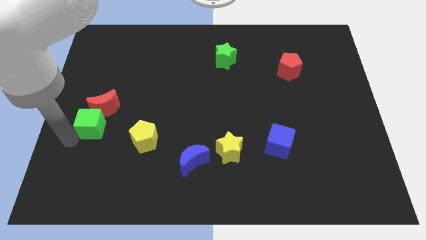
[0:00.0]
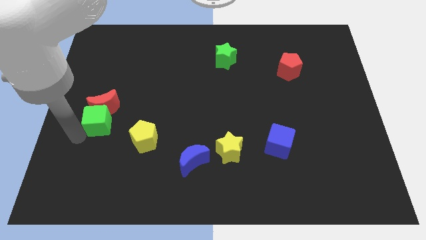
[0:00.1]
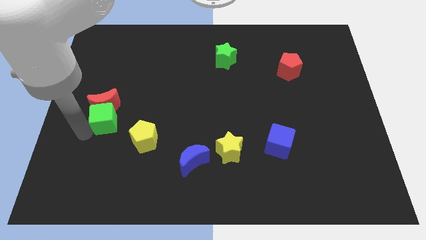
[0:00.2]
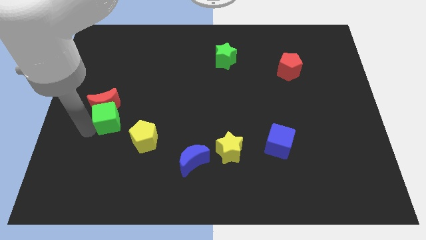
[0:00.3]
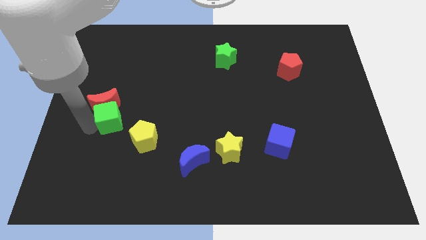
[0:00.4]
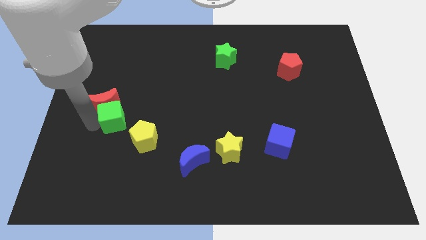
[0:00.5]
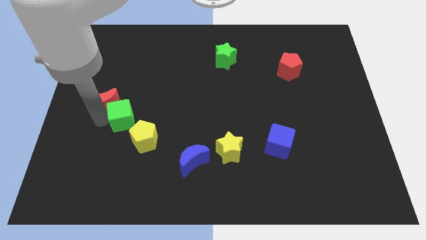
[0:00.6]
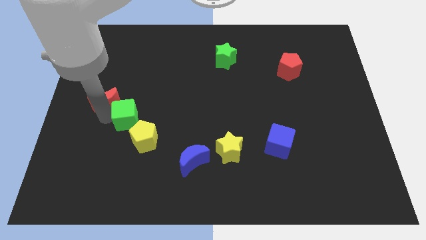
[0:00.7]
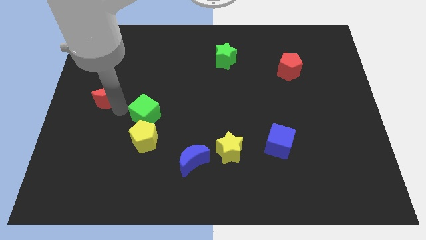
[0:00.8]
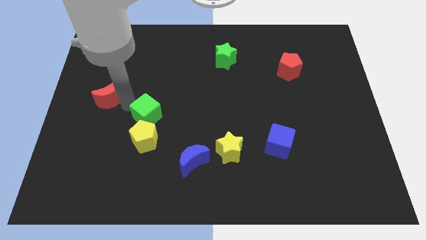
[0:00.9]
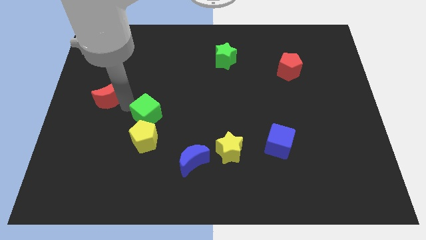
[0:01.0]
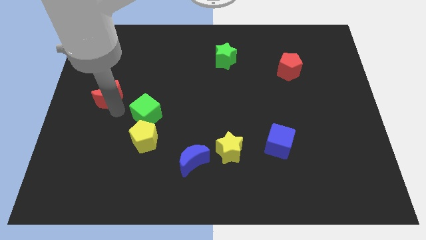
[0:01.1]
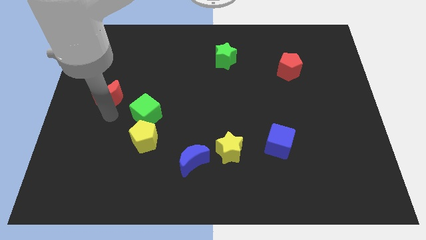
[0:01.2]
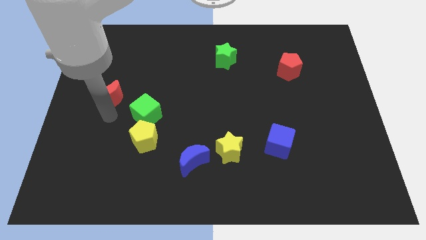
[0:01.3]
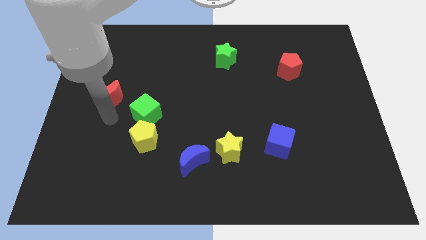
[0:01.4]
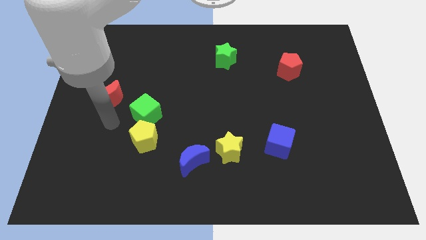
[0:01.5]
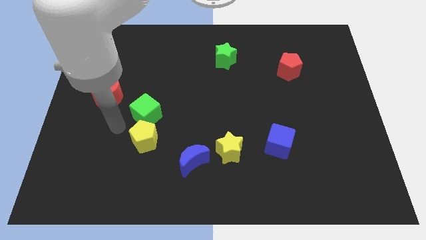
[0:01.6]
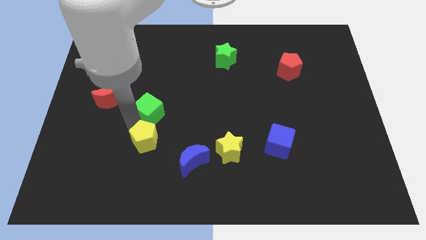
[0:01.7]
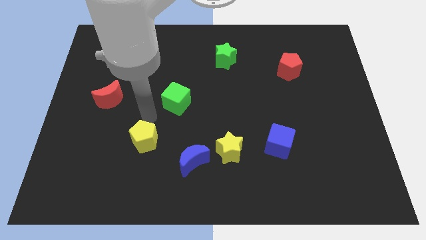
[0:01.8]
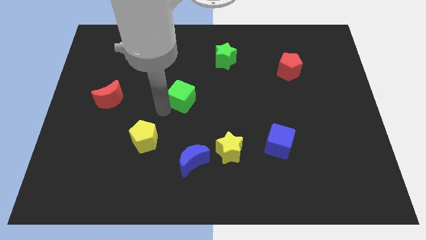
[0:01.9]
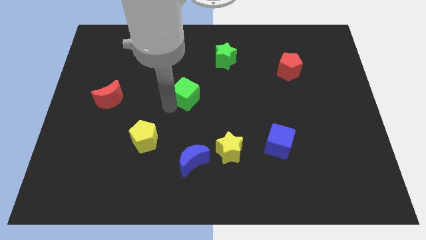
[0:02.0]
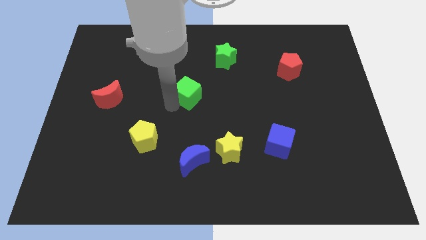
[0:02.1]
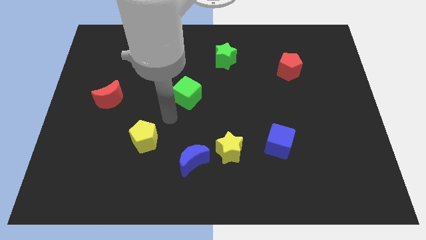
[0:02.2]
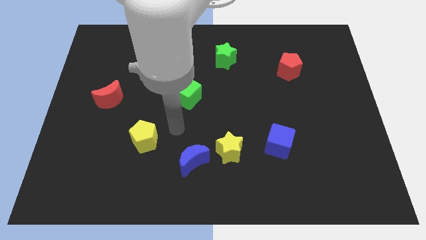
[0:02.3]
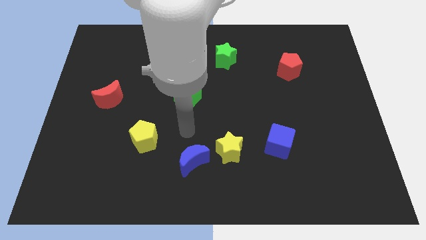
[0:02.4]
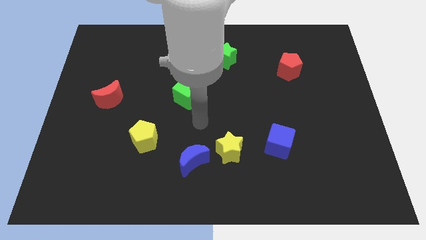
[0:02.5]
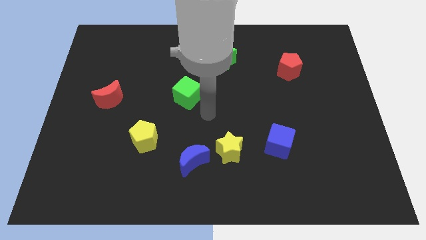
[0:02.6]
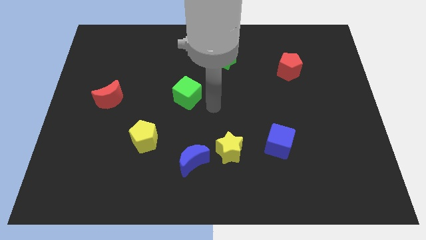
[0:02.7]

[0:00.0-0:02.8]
separate the green cube from the red moon

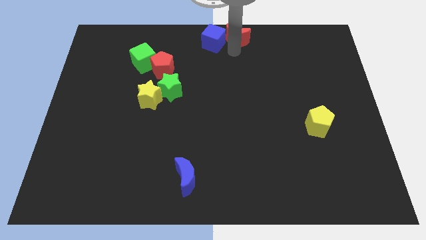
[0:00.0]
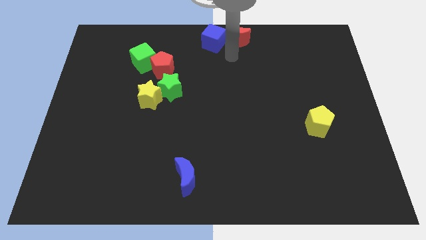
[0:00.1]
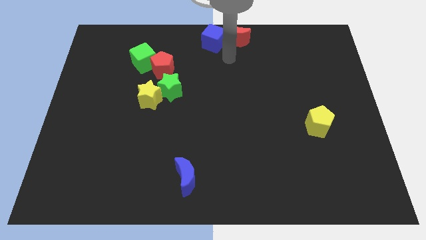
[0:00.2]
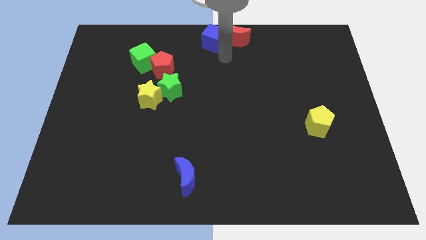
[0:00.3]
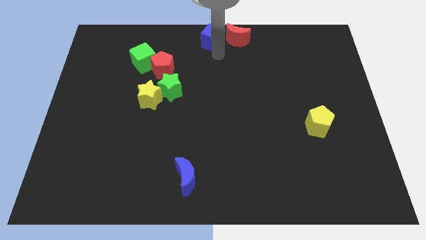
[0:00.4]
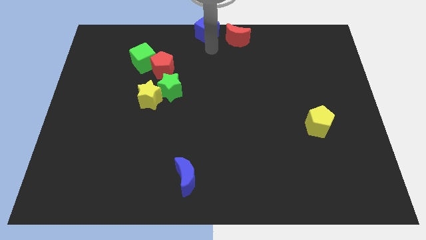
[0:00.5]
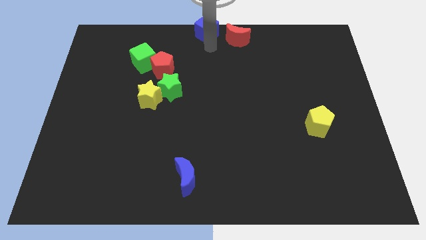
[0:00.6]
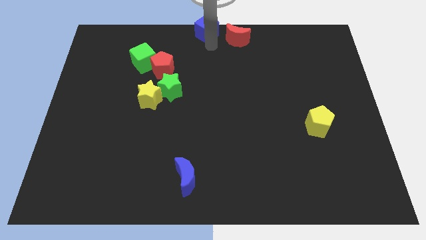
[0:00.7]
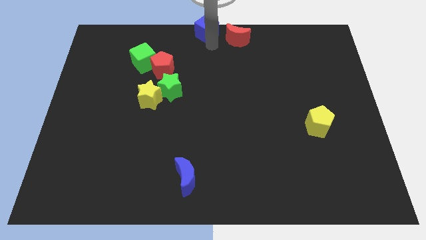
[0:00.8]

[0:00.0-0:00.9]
move the blue cube up slightly

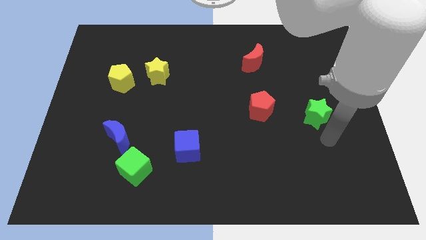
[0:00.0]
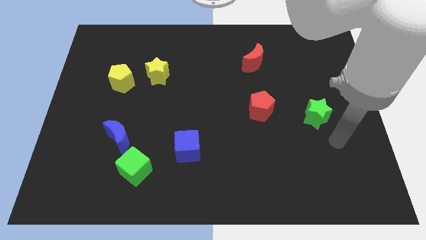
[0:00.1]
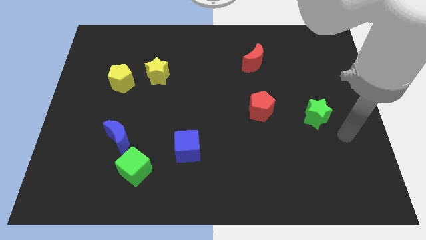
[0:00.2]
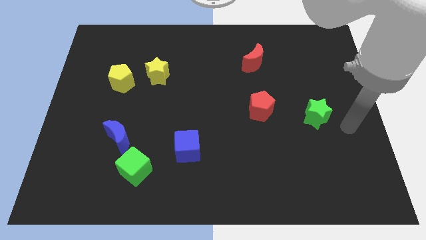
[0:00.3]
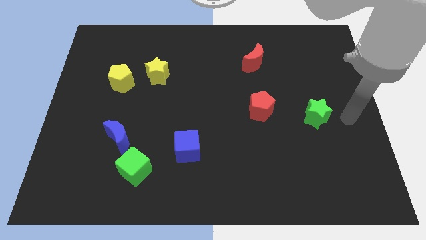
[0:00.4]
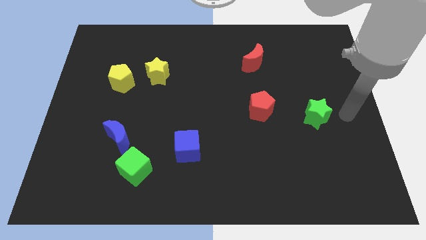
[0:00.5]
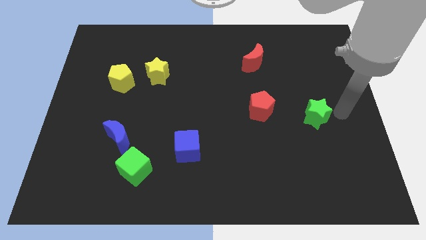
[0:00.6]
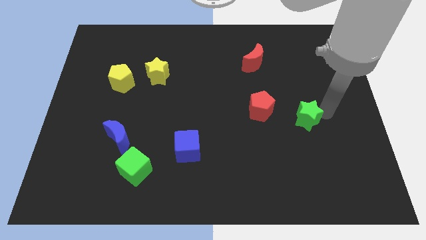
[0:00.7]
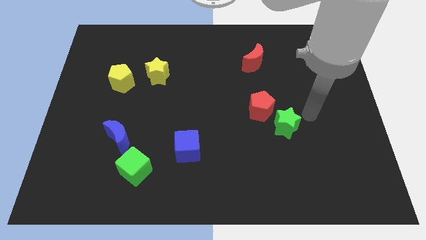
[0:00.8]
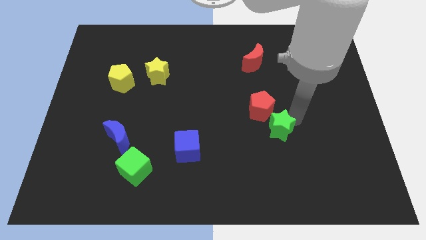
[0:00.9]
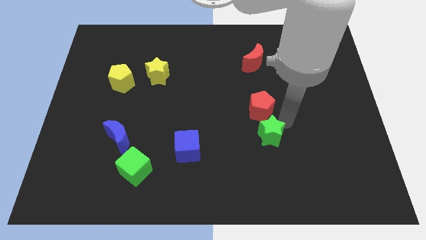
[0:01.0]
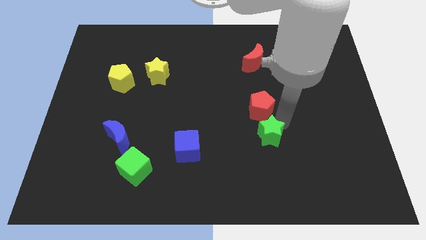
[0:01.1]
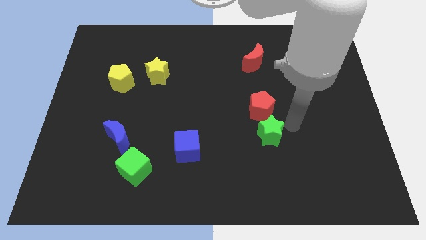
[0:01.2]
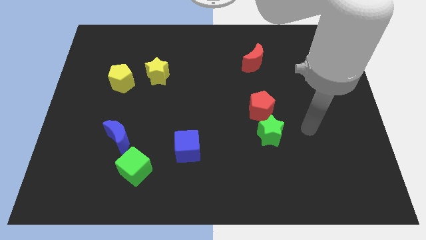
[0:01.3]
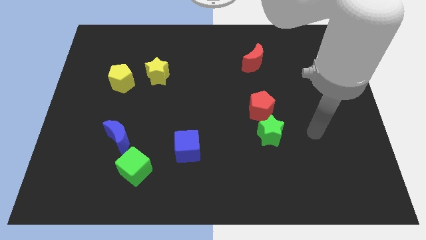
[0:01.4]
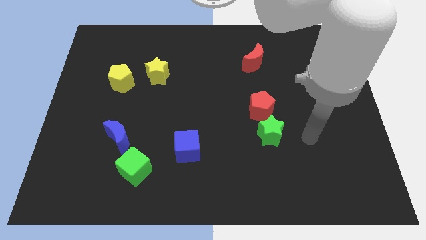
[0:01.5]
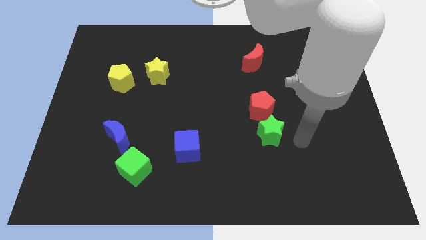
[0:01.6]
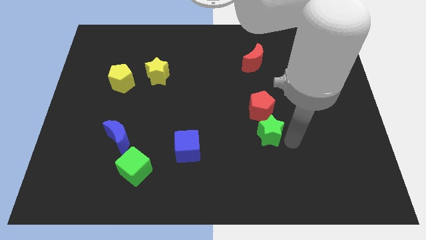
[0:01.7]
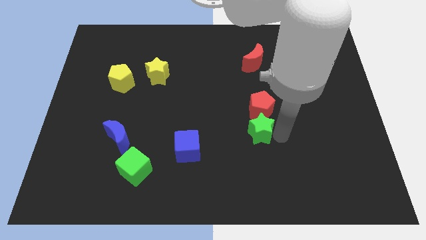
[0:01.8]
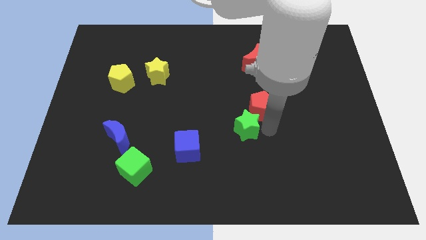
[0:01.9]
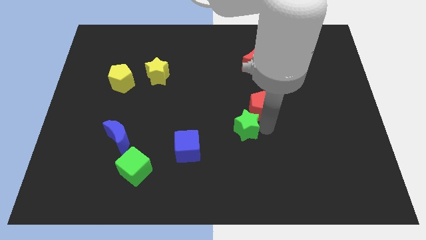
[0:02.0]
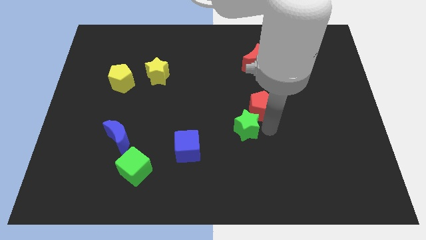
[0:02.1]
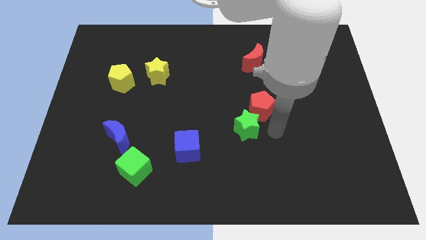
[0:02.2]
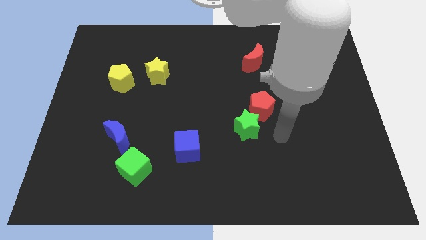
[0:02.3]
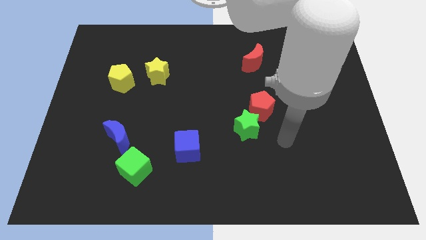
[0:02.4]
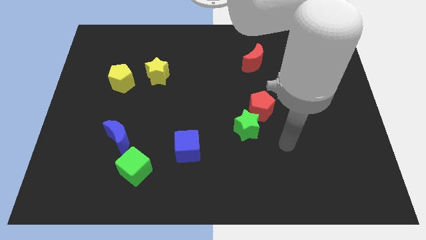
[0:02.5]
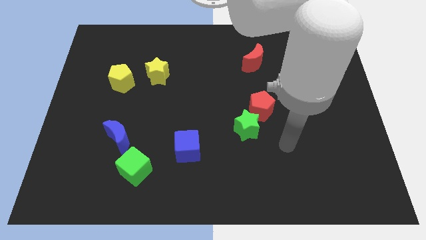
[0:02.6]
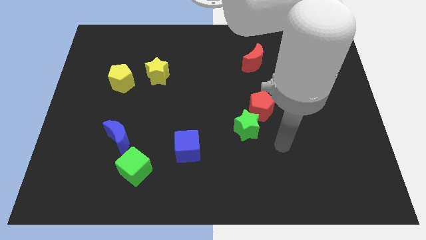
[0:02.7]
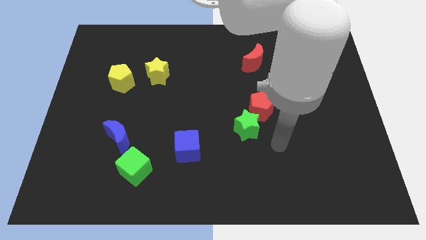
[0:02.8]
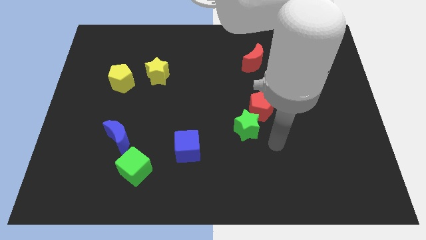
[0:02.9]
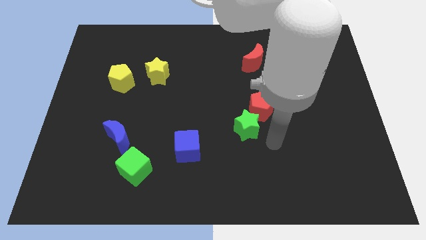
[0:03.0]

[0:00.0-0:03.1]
place the green star at the bottom left side of the red pentagon

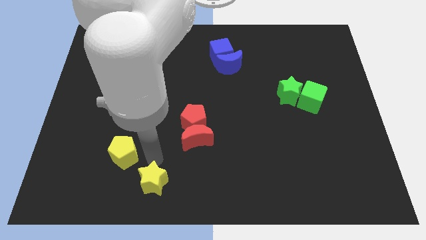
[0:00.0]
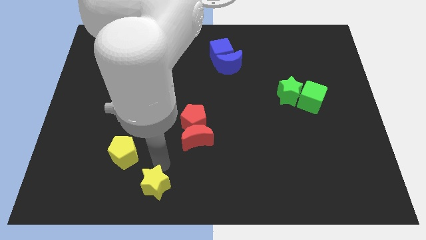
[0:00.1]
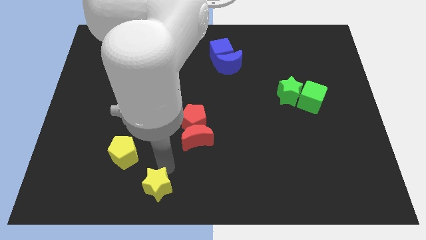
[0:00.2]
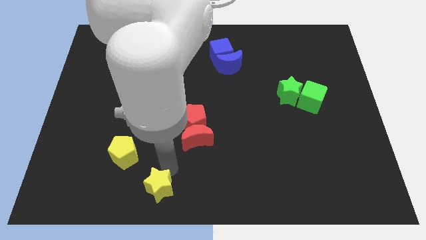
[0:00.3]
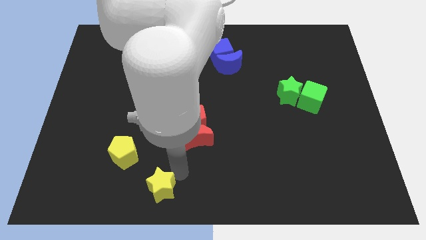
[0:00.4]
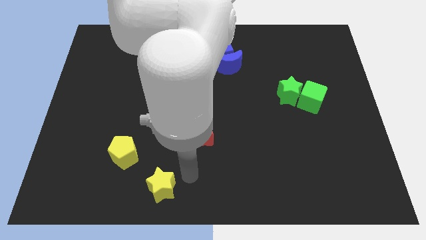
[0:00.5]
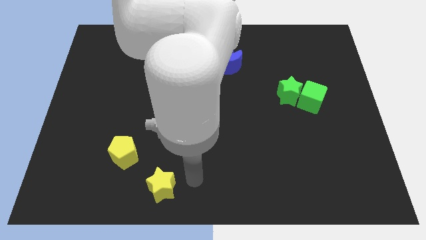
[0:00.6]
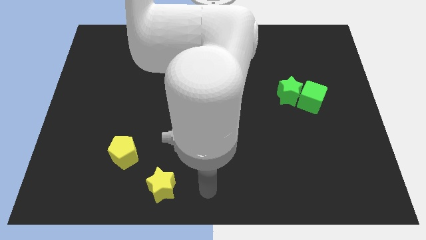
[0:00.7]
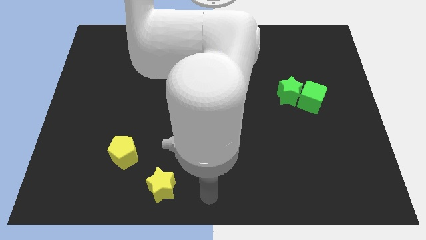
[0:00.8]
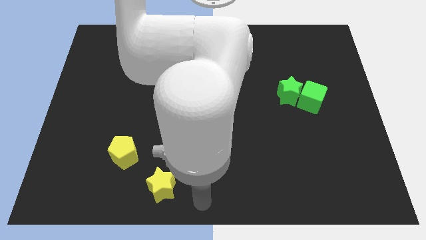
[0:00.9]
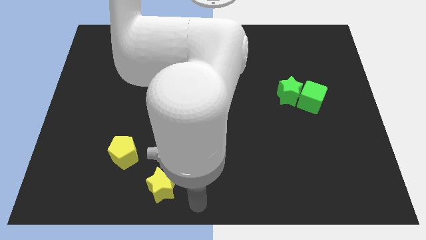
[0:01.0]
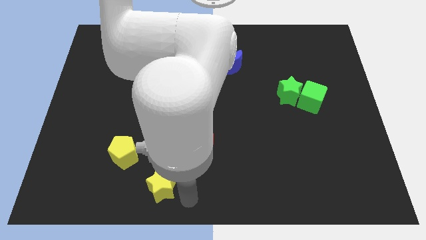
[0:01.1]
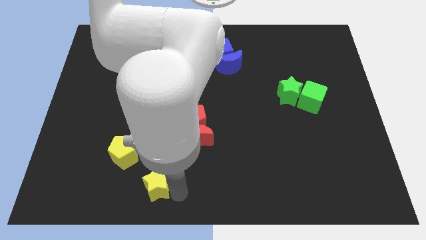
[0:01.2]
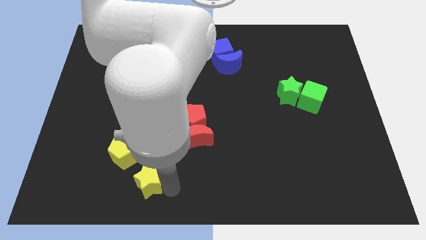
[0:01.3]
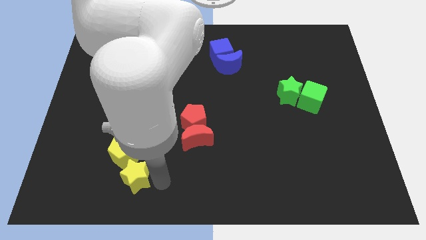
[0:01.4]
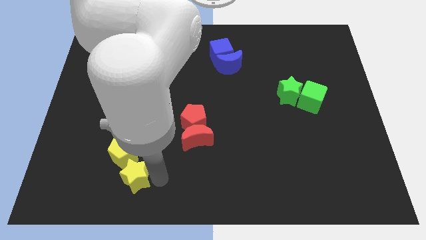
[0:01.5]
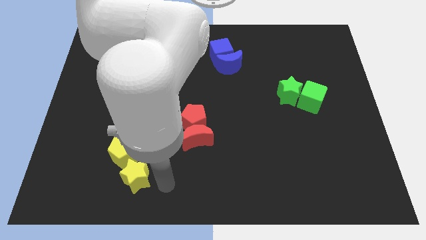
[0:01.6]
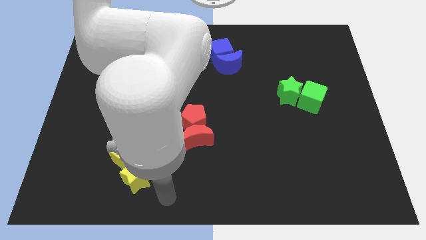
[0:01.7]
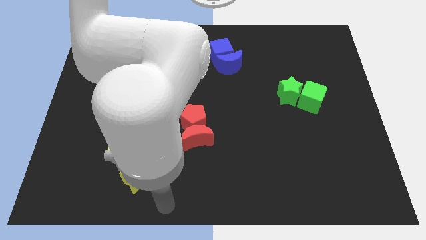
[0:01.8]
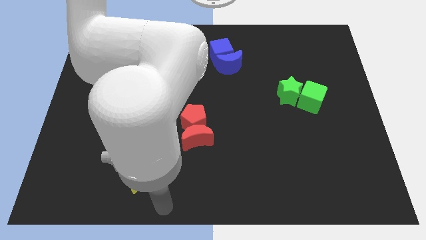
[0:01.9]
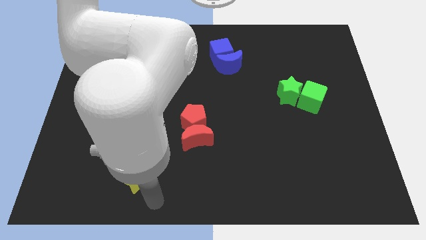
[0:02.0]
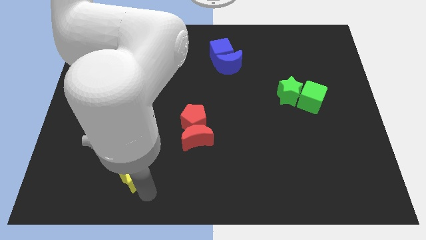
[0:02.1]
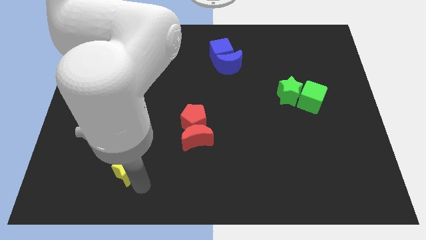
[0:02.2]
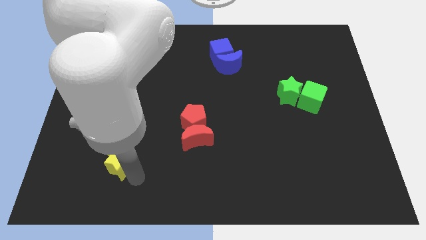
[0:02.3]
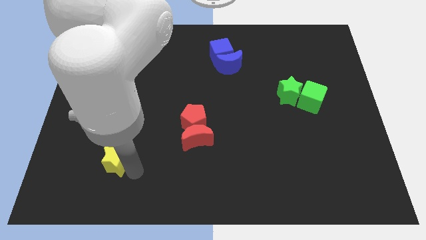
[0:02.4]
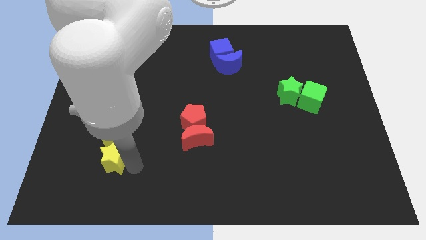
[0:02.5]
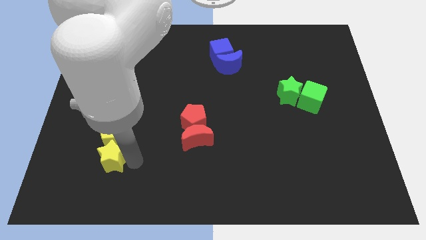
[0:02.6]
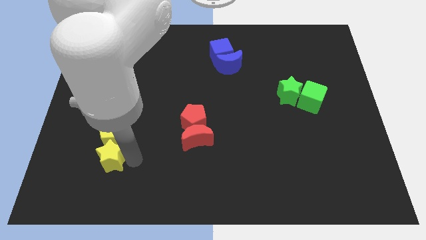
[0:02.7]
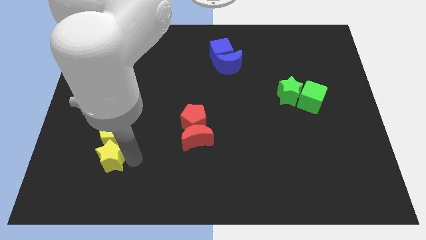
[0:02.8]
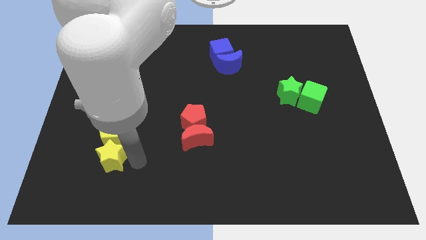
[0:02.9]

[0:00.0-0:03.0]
push the yellow star into the yellow pentagon
